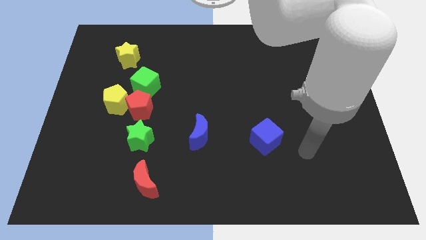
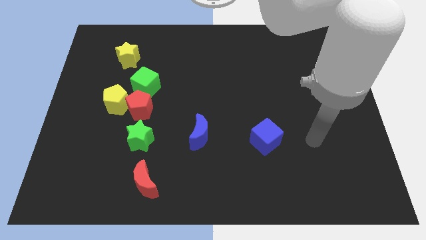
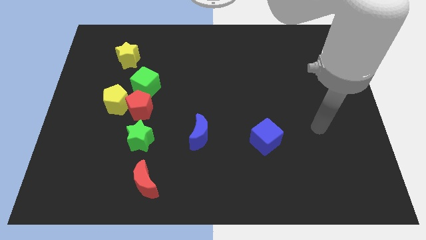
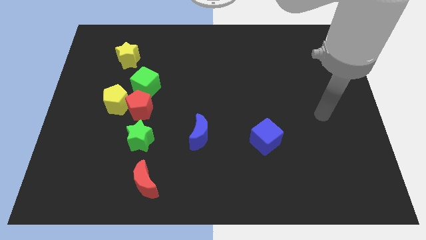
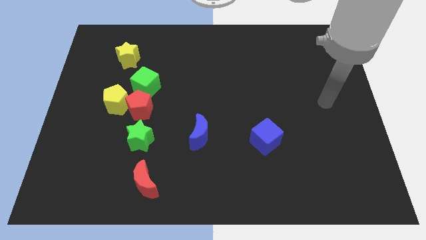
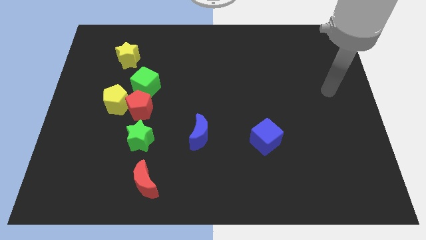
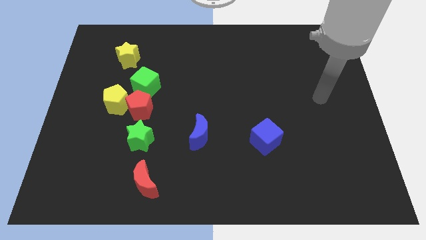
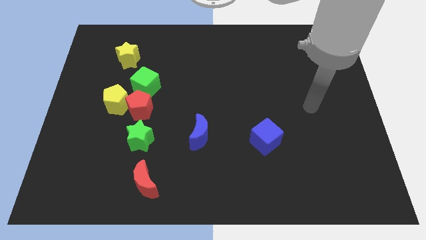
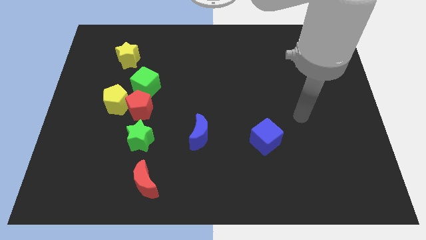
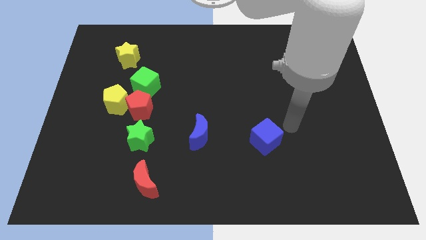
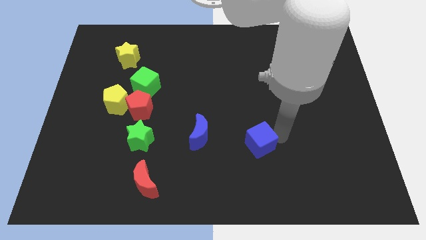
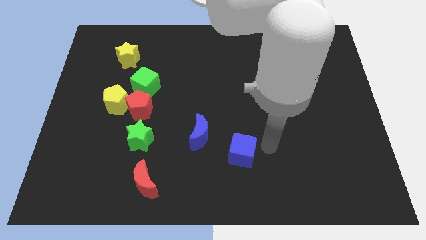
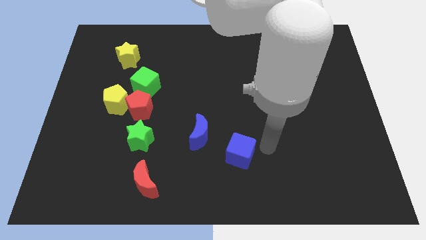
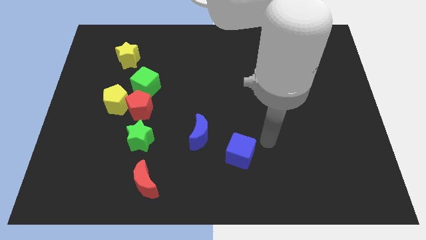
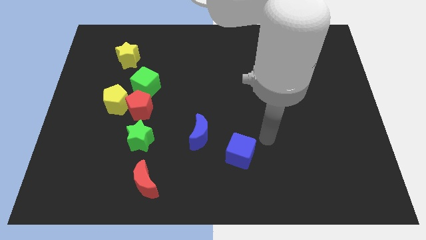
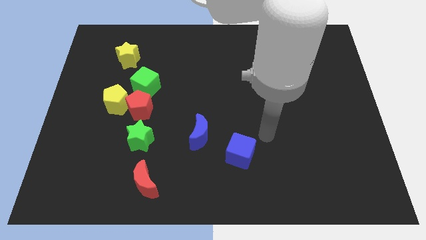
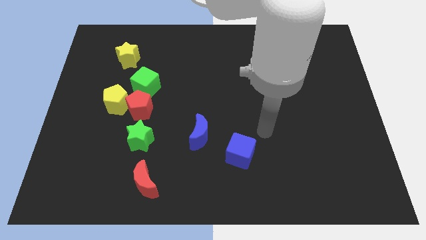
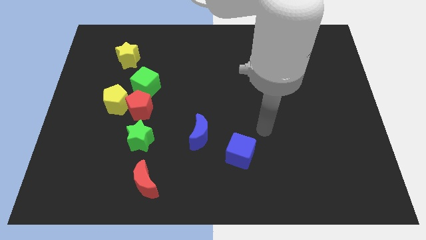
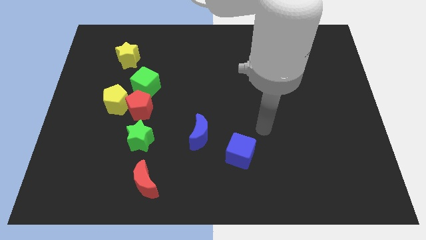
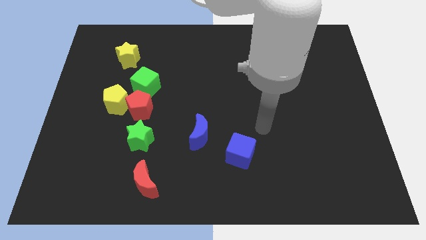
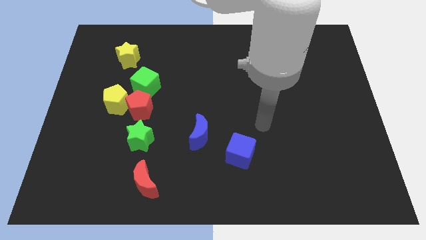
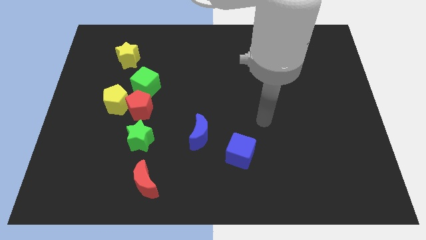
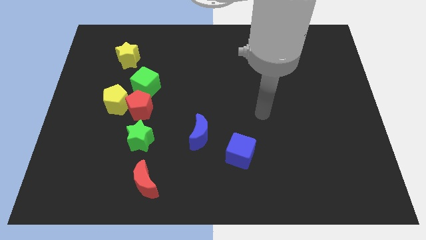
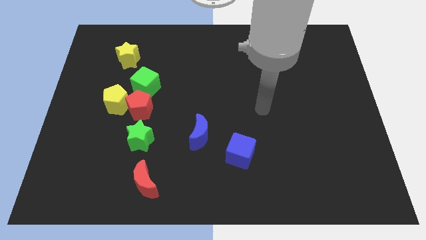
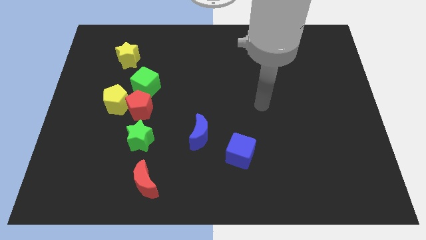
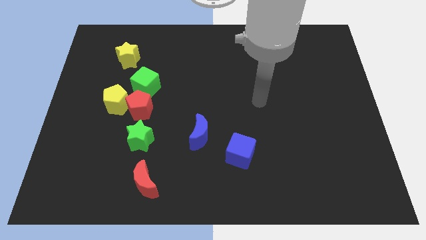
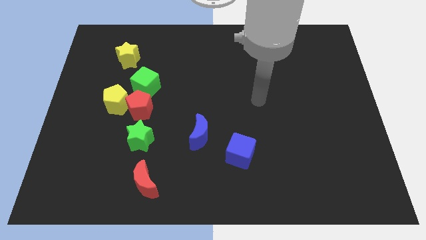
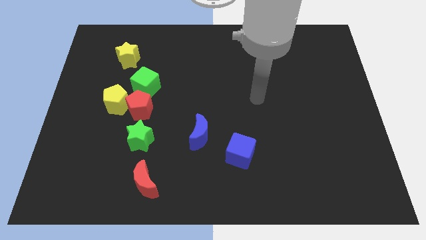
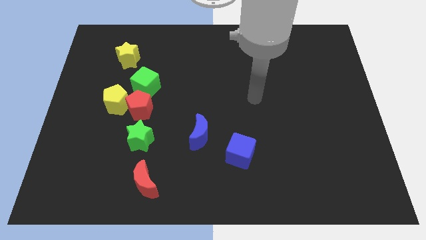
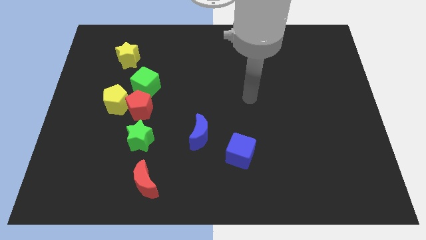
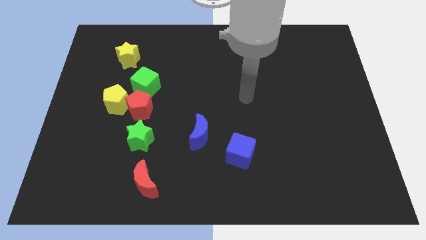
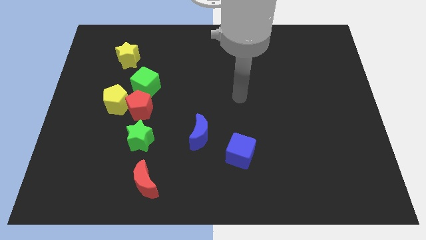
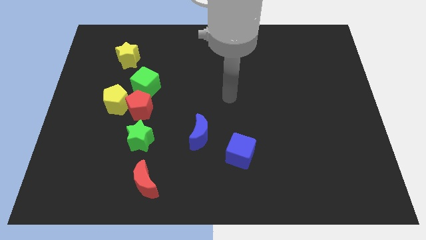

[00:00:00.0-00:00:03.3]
slightly push the blue cube downwards

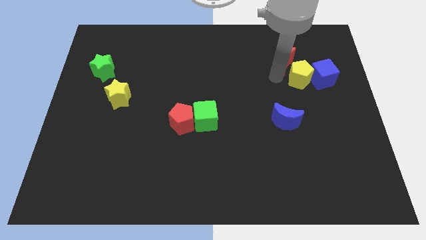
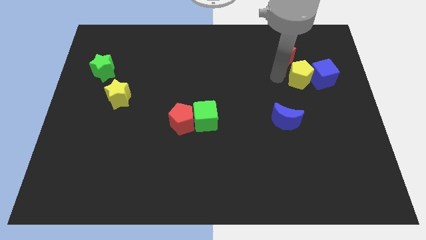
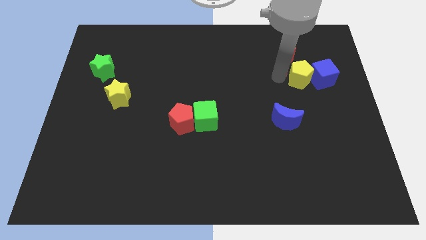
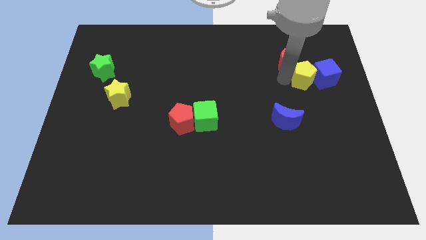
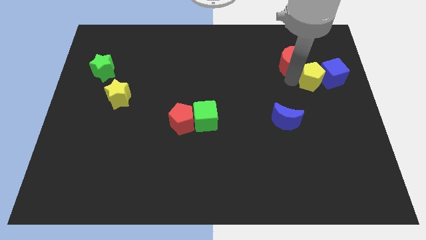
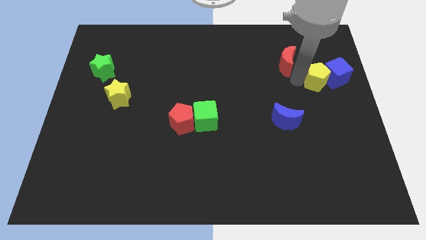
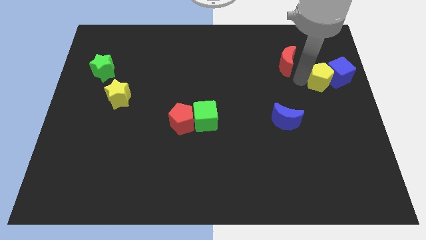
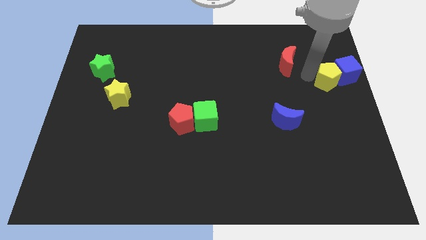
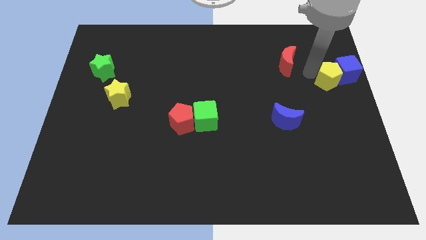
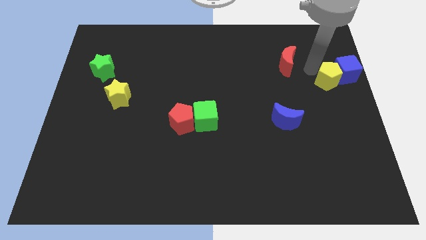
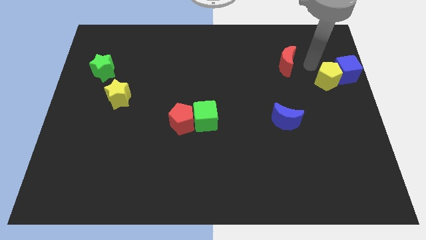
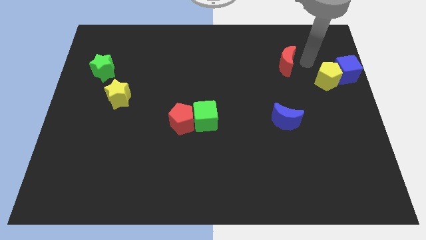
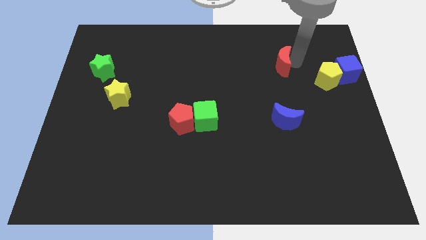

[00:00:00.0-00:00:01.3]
push the yellow pentagon slightly to the right

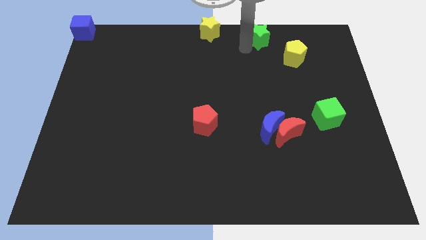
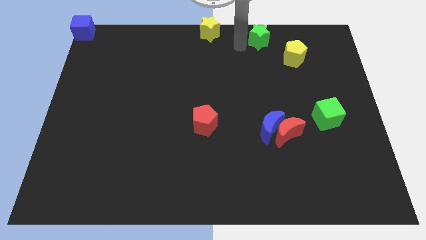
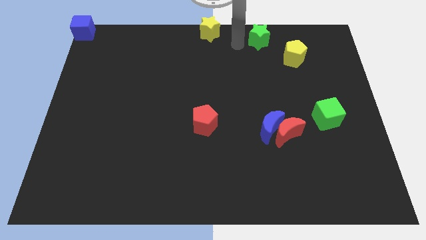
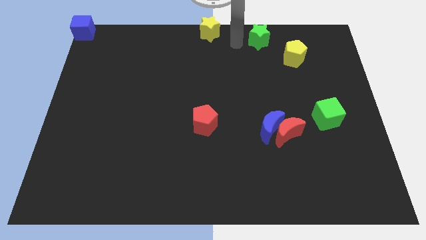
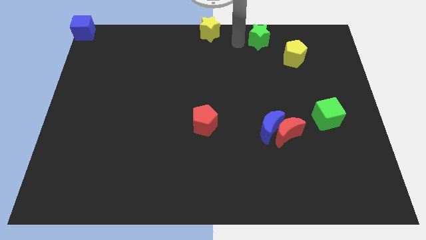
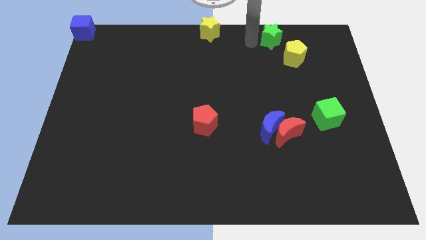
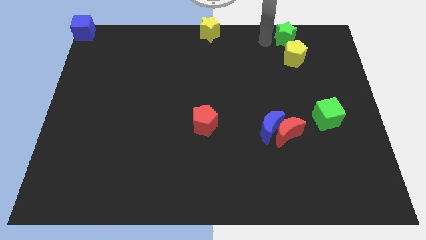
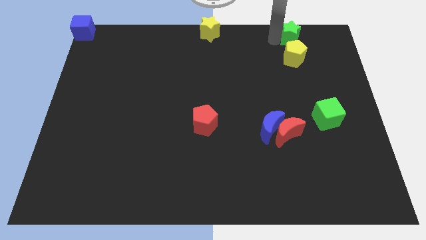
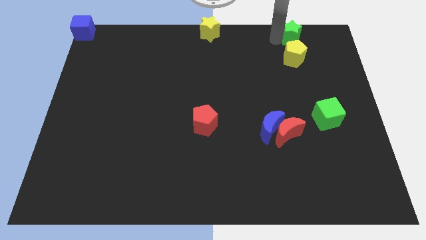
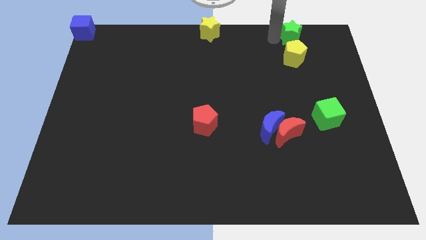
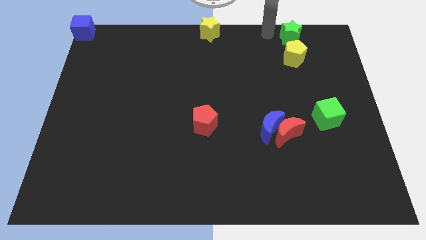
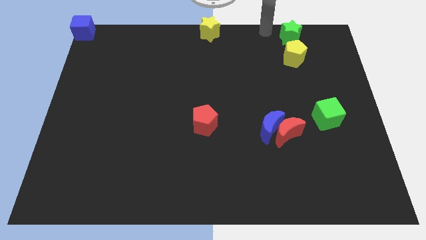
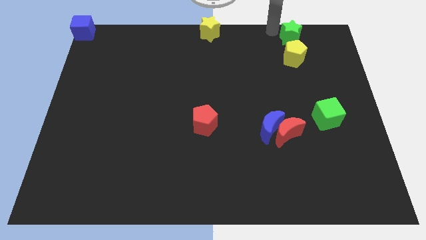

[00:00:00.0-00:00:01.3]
move the green star to the top side of the yellow pentagon

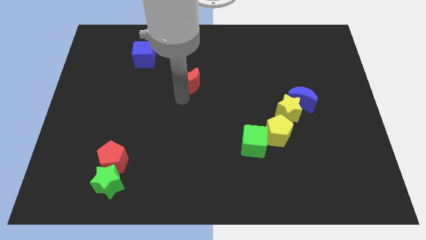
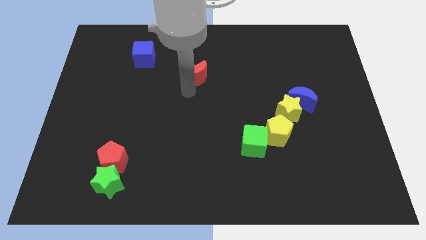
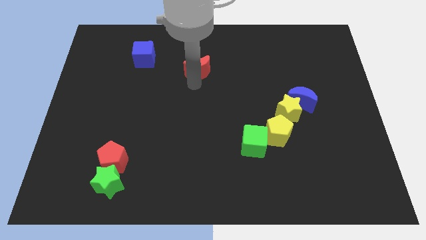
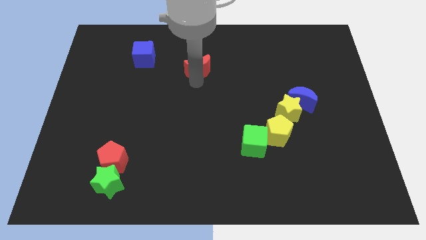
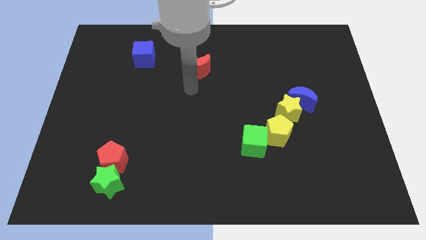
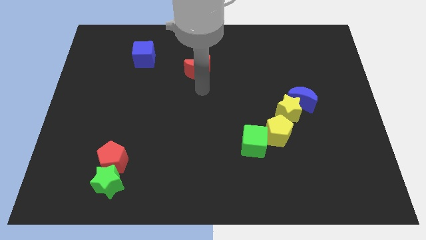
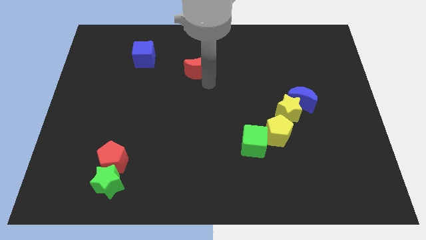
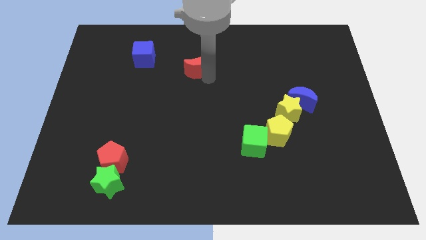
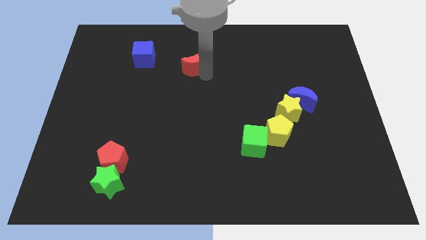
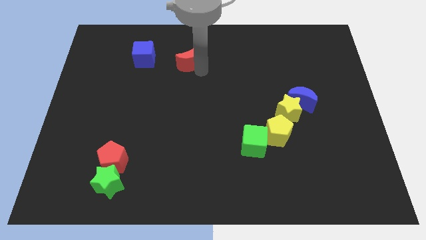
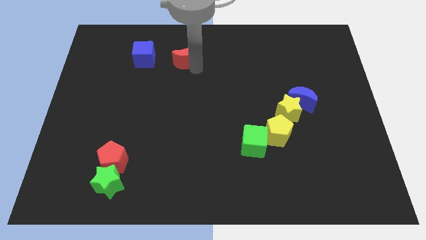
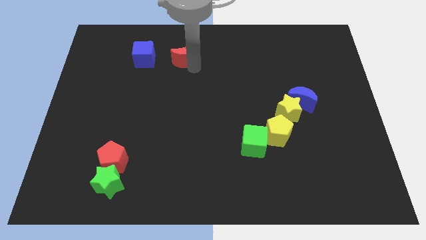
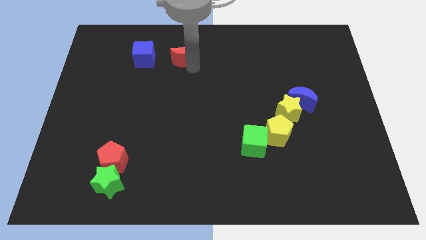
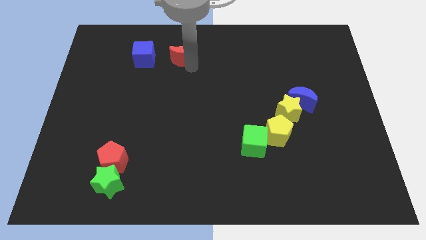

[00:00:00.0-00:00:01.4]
place red crescent on right side of blue cube

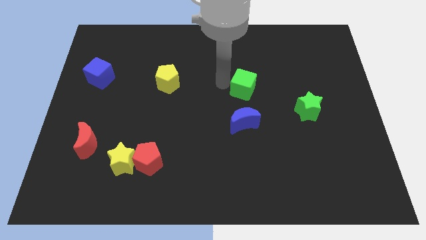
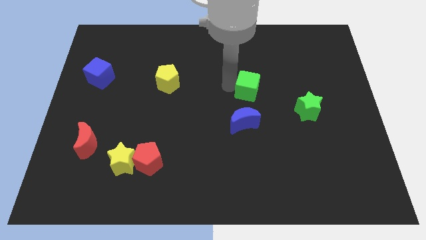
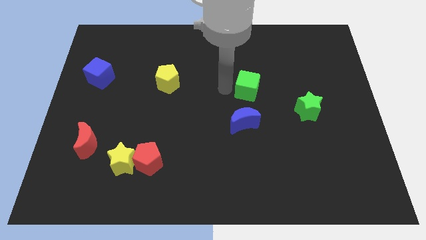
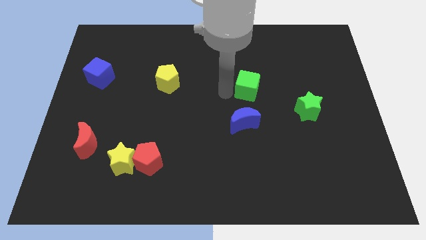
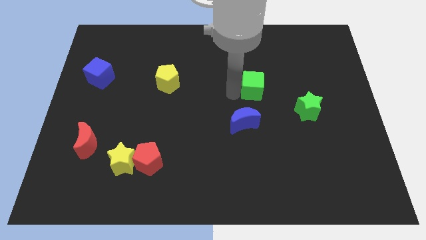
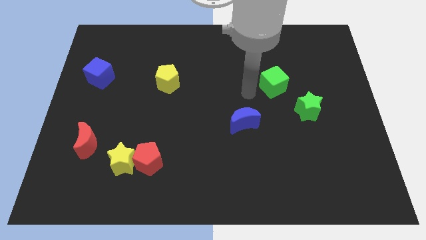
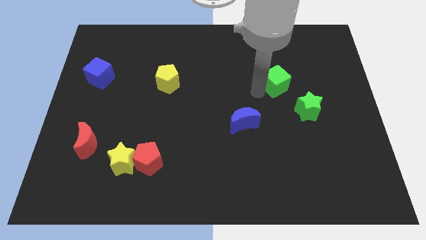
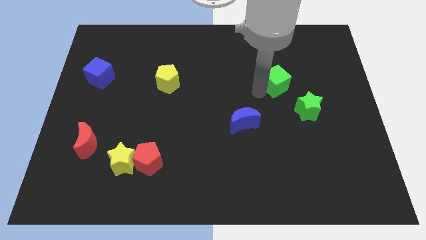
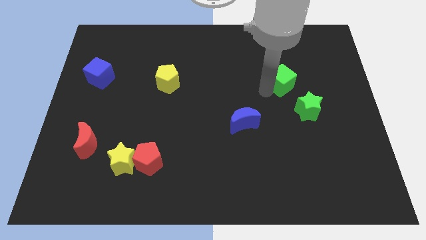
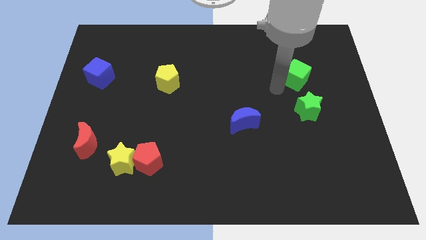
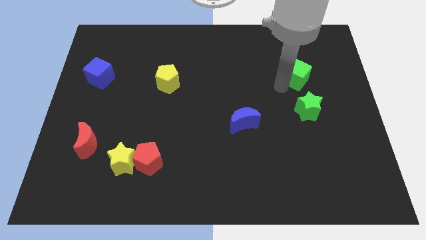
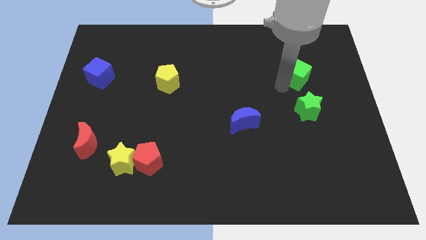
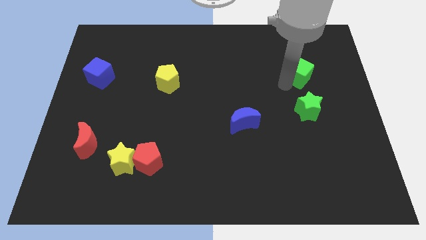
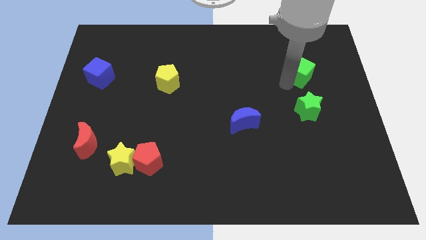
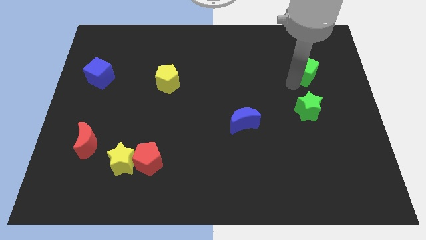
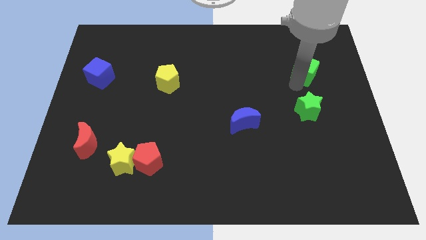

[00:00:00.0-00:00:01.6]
place the green cube at the top of green star
